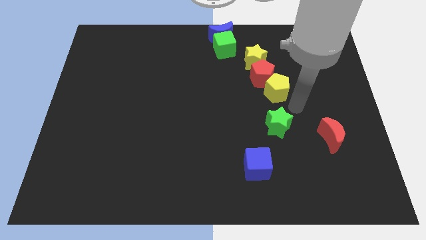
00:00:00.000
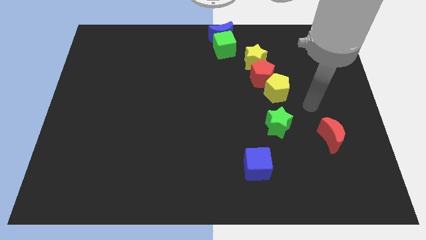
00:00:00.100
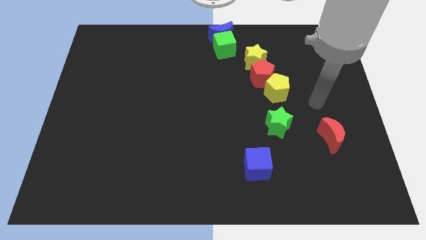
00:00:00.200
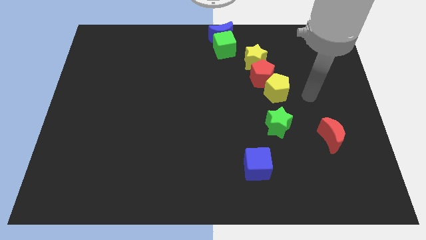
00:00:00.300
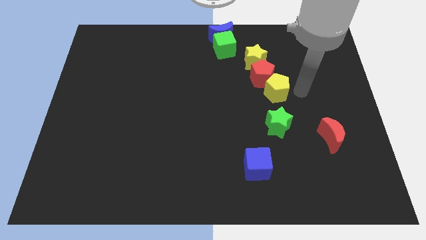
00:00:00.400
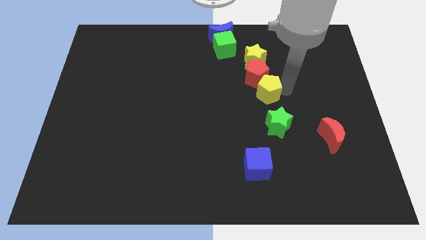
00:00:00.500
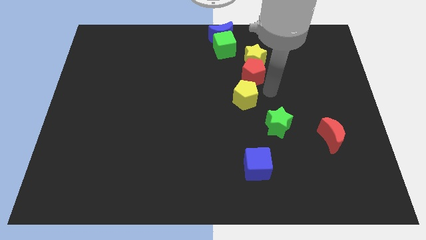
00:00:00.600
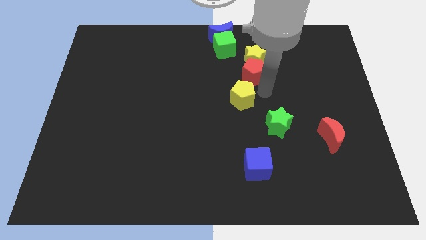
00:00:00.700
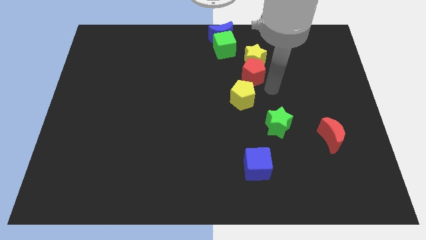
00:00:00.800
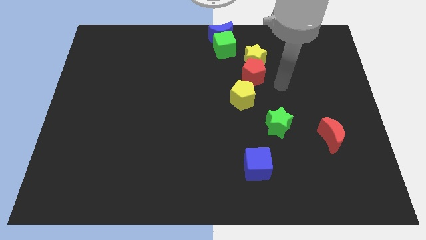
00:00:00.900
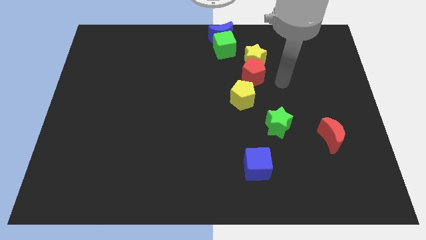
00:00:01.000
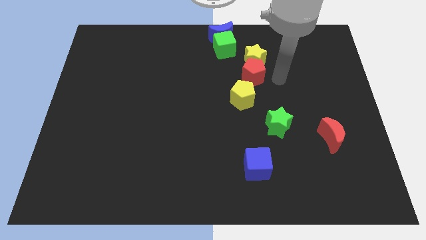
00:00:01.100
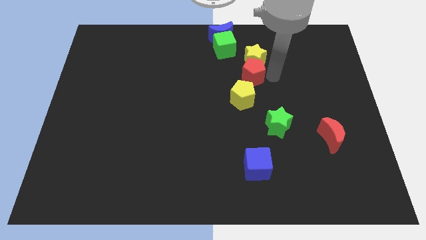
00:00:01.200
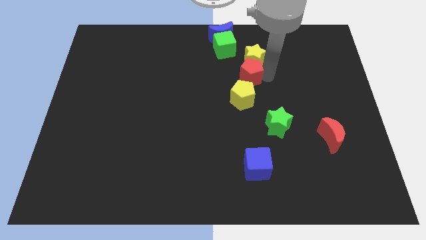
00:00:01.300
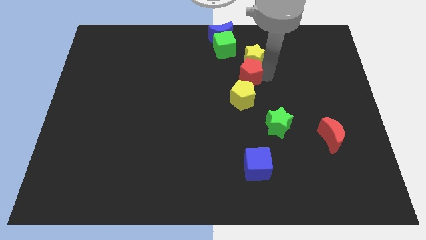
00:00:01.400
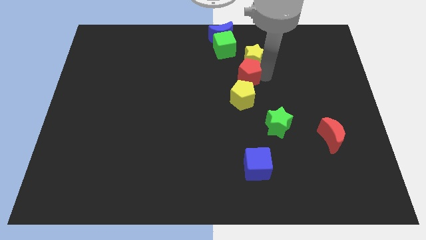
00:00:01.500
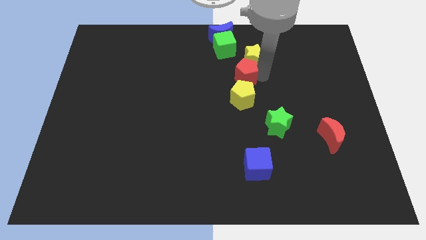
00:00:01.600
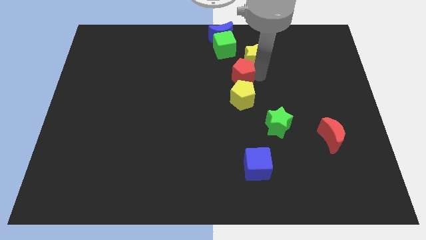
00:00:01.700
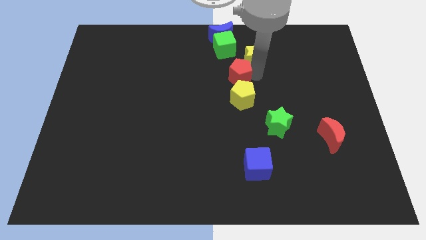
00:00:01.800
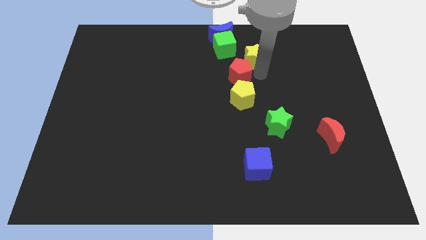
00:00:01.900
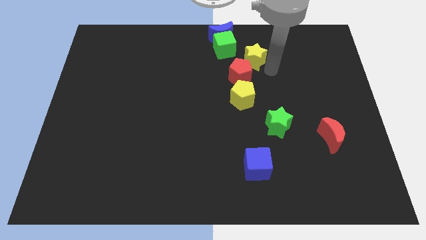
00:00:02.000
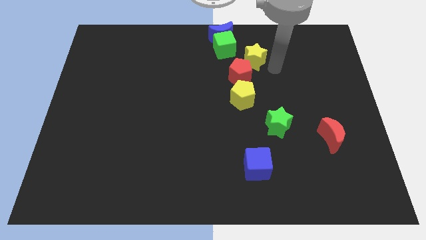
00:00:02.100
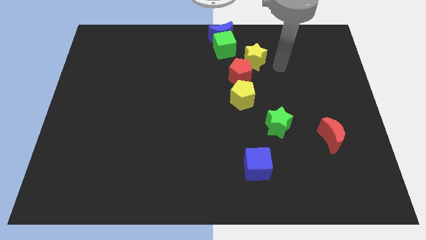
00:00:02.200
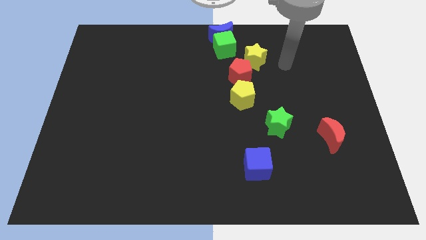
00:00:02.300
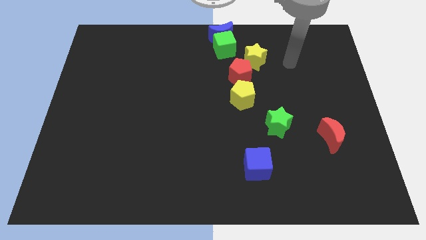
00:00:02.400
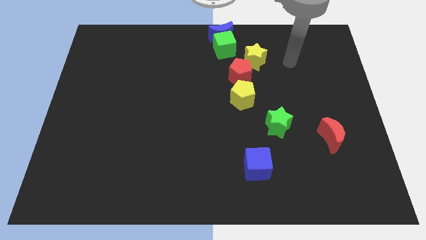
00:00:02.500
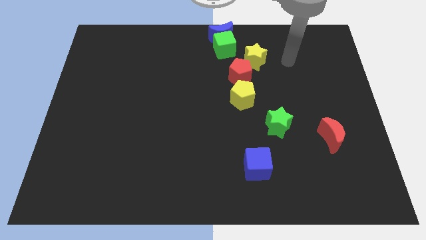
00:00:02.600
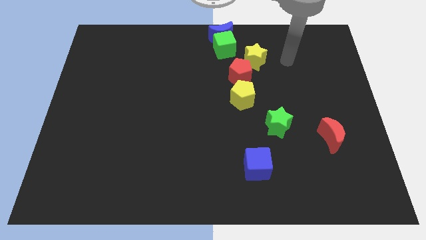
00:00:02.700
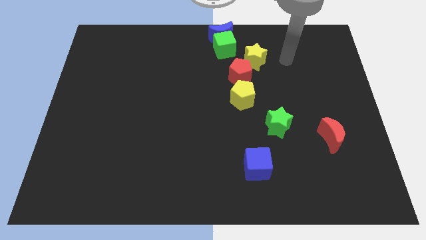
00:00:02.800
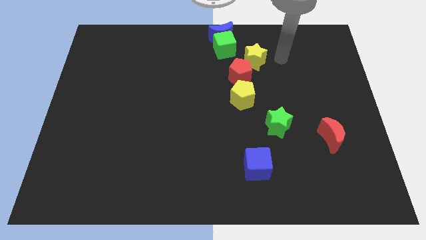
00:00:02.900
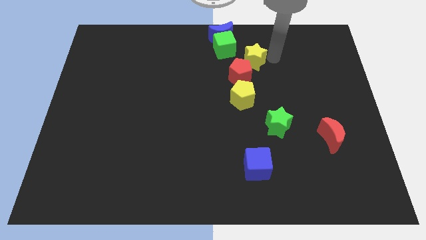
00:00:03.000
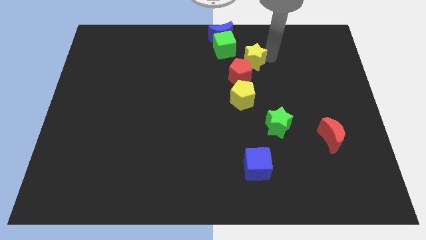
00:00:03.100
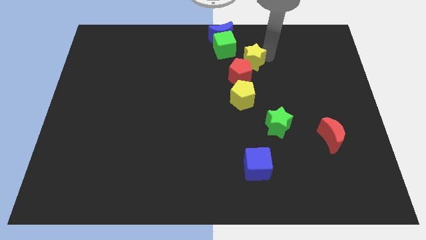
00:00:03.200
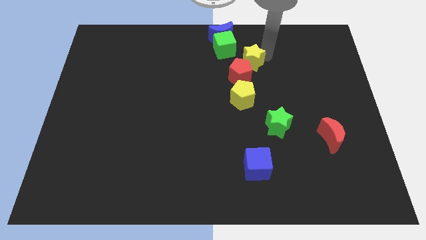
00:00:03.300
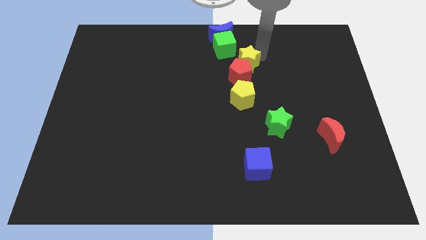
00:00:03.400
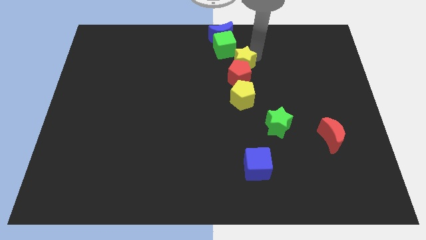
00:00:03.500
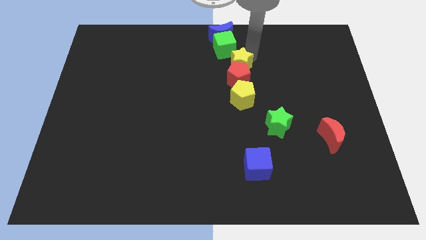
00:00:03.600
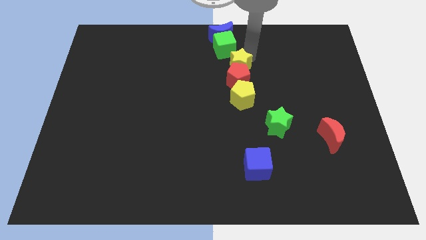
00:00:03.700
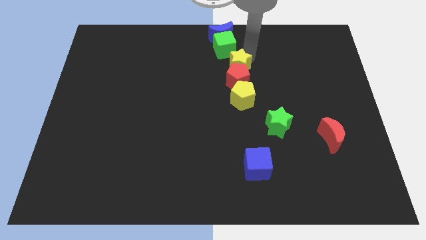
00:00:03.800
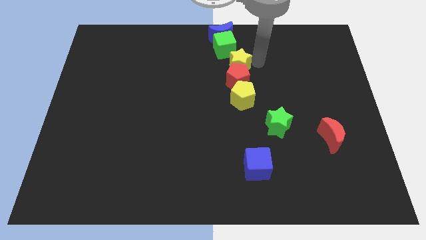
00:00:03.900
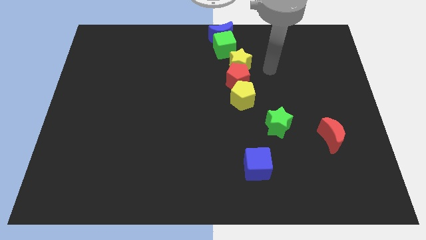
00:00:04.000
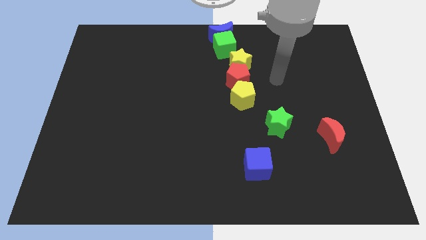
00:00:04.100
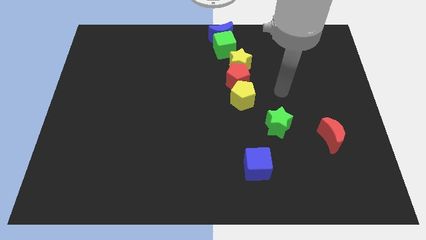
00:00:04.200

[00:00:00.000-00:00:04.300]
adjust both the yellow blocks and red pentagon close to each other

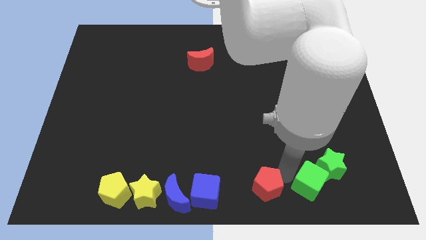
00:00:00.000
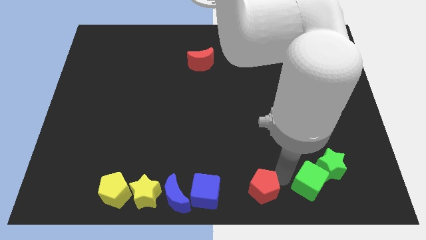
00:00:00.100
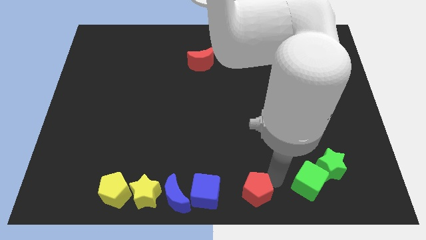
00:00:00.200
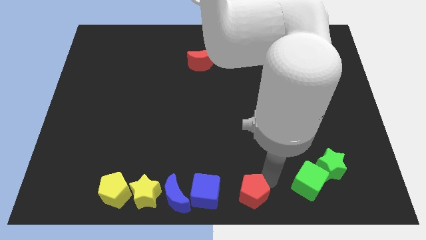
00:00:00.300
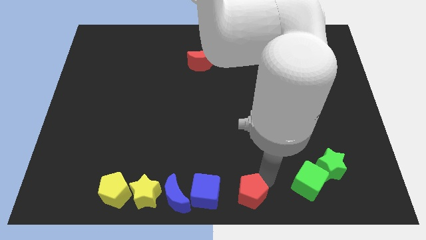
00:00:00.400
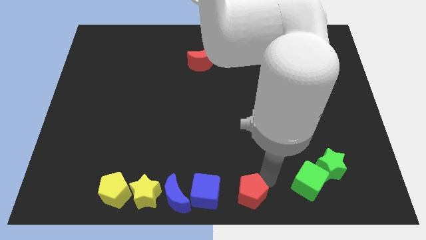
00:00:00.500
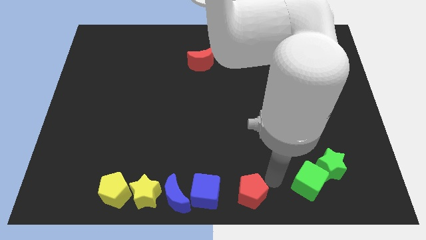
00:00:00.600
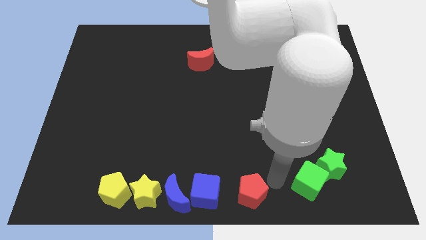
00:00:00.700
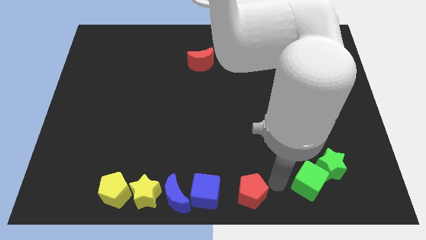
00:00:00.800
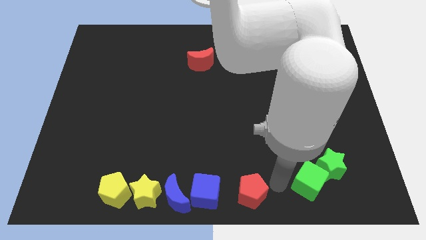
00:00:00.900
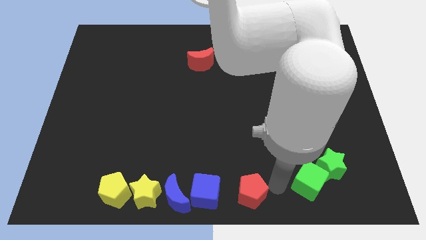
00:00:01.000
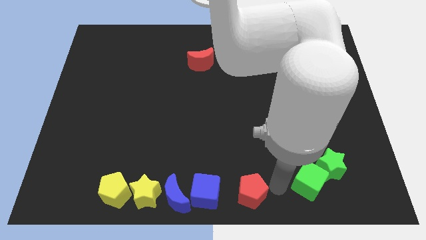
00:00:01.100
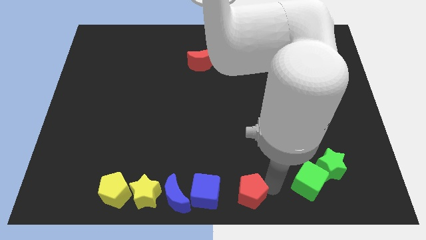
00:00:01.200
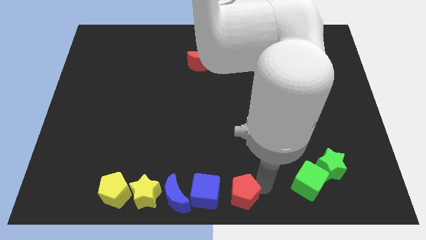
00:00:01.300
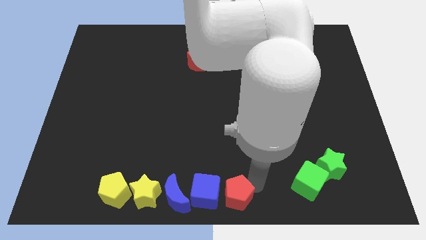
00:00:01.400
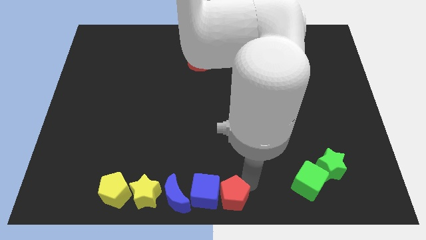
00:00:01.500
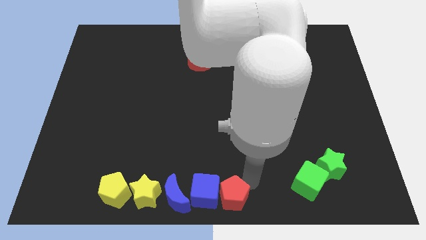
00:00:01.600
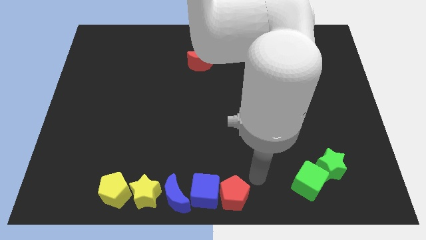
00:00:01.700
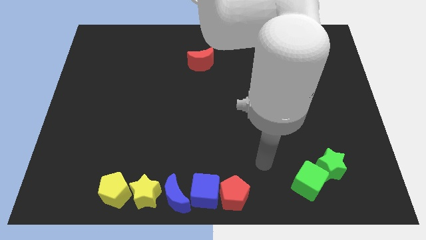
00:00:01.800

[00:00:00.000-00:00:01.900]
push red pentagon into the blue cube

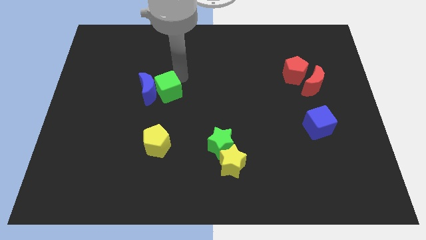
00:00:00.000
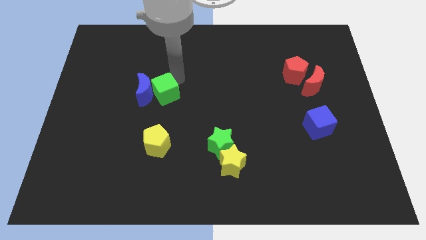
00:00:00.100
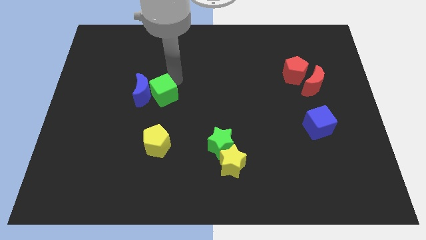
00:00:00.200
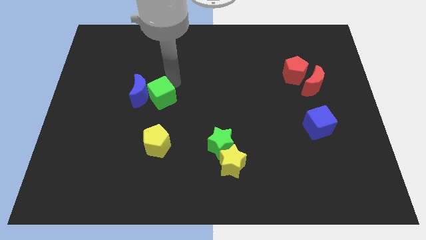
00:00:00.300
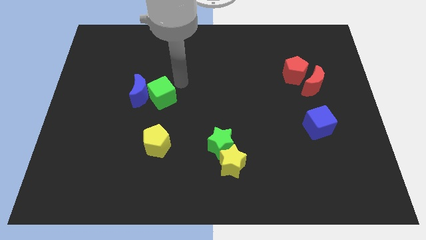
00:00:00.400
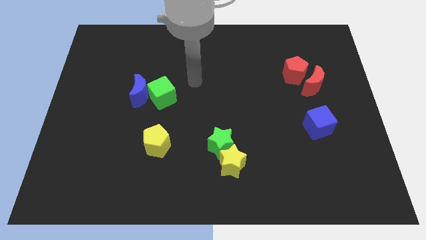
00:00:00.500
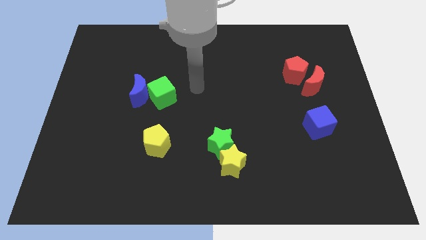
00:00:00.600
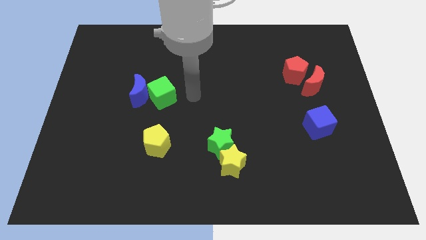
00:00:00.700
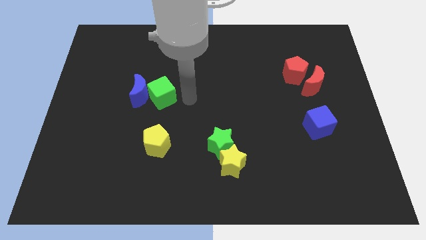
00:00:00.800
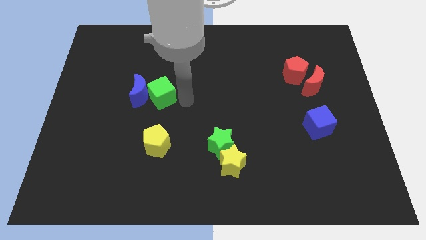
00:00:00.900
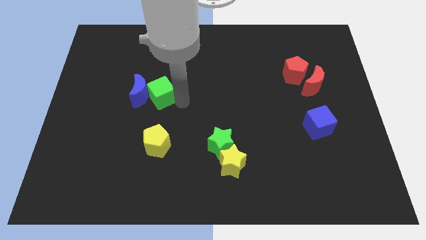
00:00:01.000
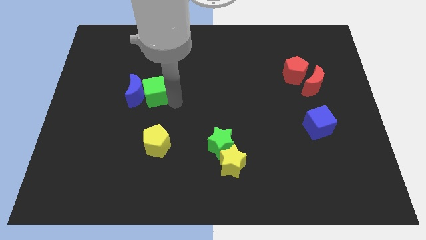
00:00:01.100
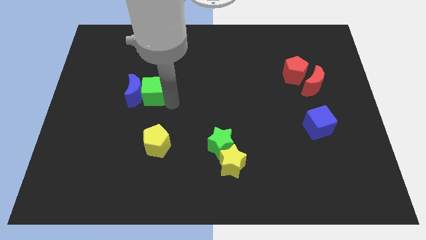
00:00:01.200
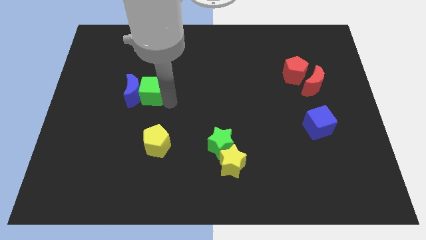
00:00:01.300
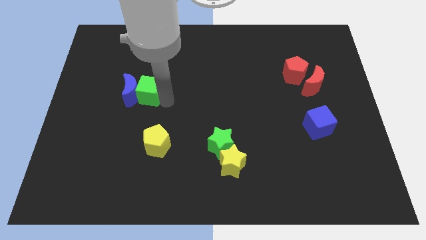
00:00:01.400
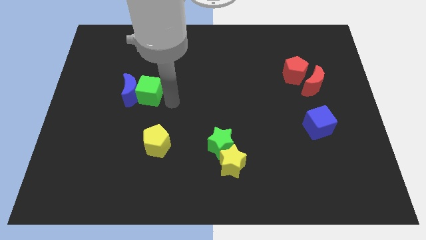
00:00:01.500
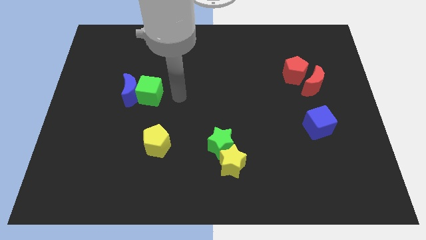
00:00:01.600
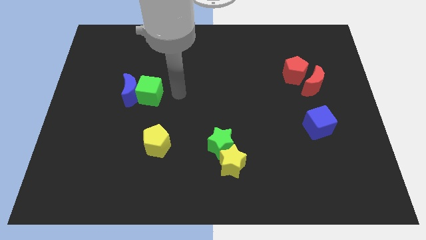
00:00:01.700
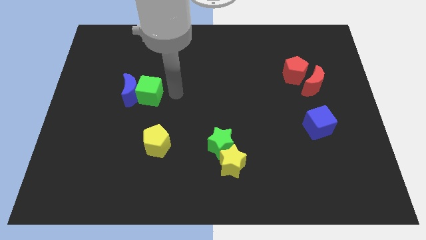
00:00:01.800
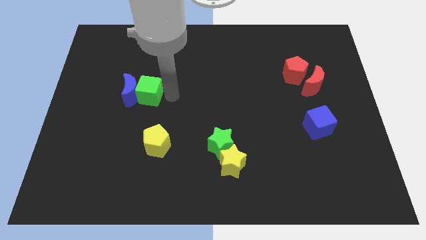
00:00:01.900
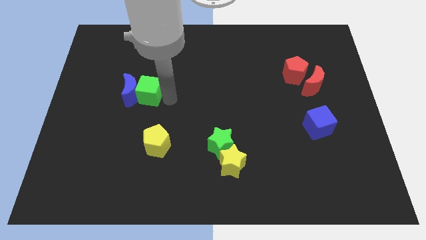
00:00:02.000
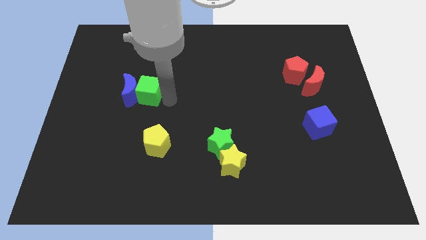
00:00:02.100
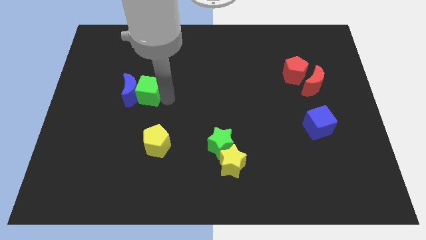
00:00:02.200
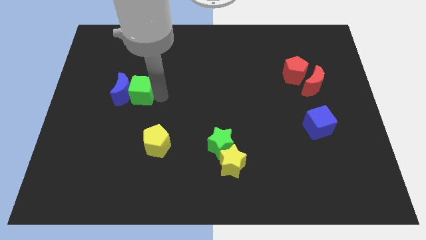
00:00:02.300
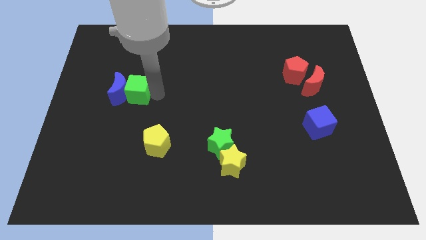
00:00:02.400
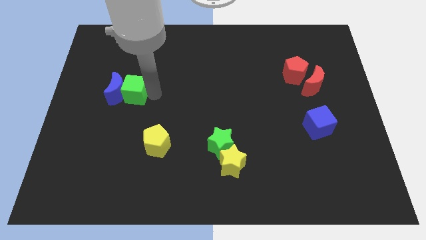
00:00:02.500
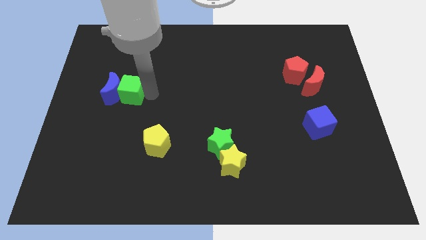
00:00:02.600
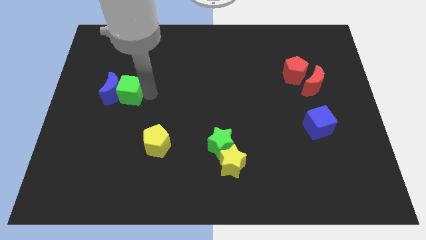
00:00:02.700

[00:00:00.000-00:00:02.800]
slightly move the green star and blue moon towards the left
